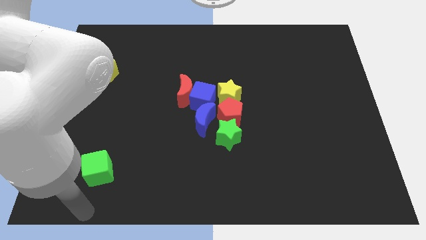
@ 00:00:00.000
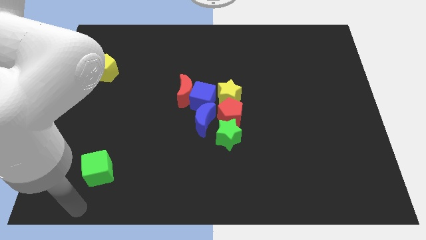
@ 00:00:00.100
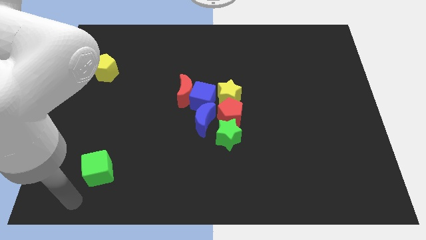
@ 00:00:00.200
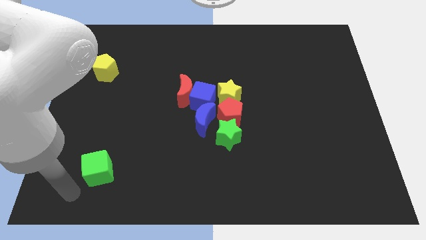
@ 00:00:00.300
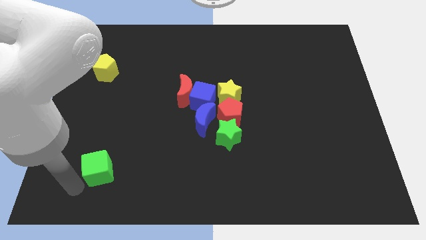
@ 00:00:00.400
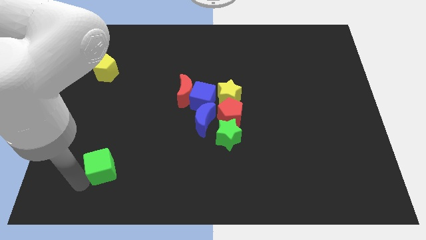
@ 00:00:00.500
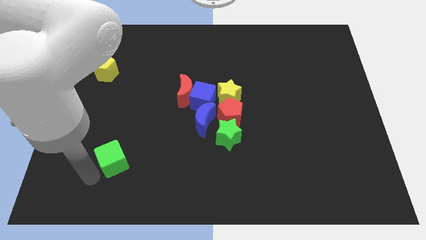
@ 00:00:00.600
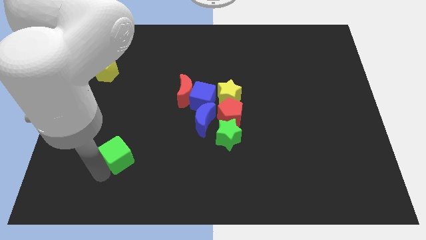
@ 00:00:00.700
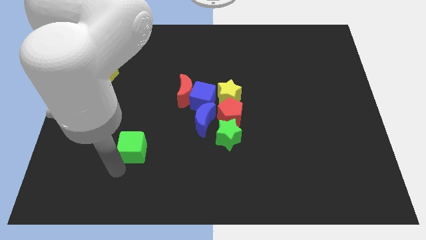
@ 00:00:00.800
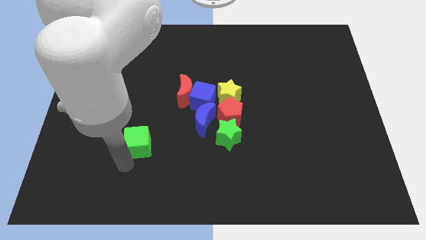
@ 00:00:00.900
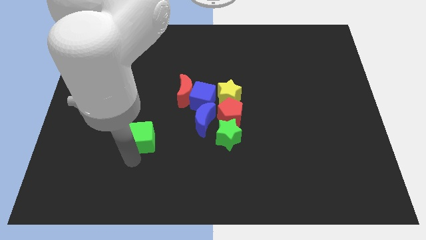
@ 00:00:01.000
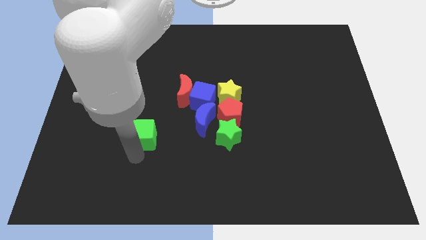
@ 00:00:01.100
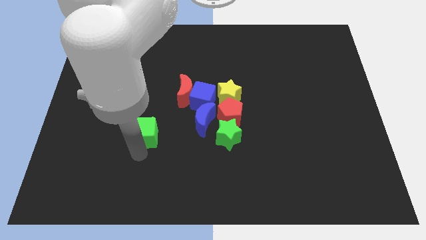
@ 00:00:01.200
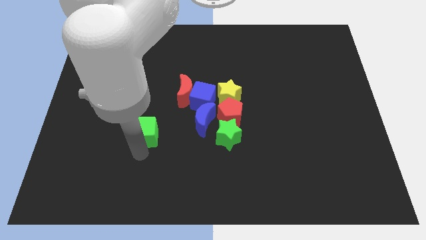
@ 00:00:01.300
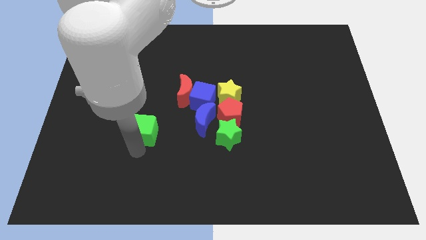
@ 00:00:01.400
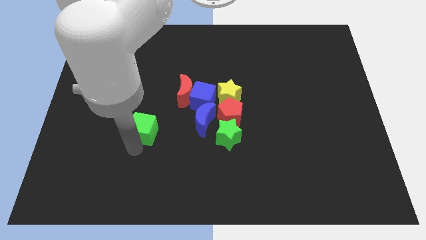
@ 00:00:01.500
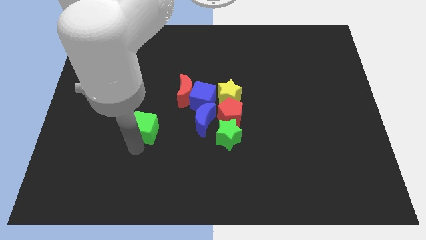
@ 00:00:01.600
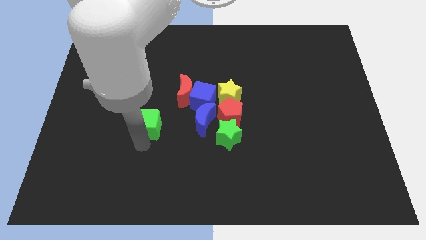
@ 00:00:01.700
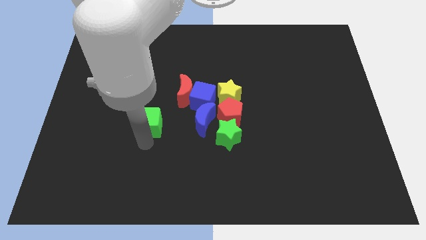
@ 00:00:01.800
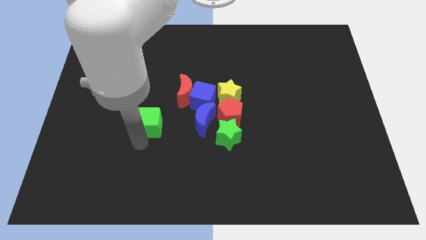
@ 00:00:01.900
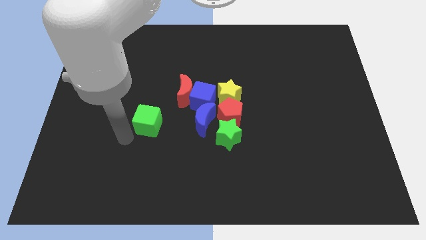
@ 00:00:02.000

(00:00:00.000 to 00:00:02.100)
move green cube to the left of blue moon

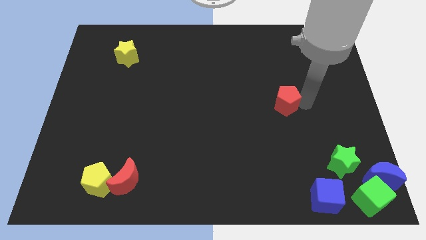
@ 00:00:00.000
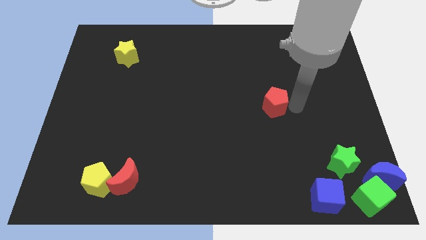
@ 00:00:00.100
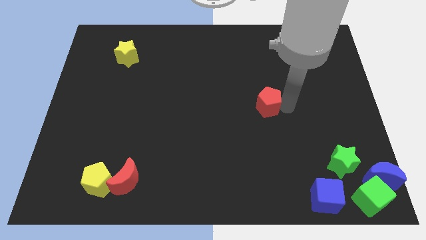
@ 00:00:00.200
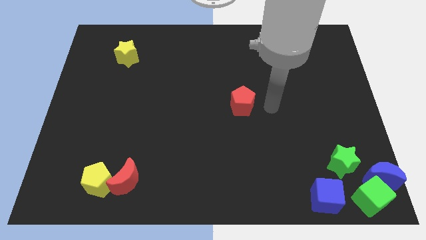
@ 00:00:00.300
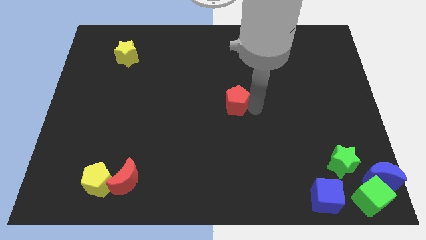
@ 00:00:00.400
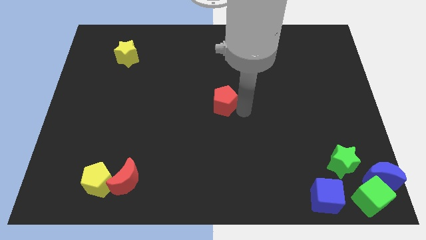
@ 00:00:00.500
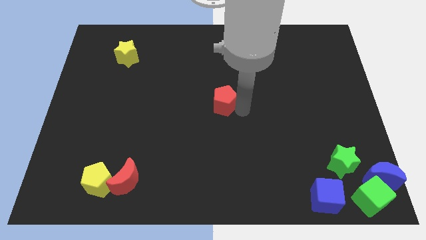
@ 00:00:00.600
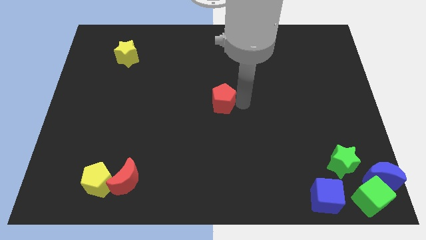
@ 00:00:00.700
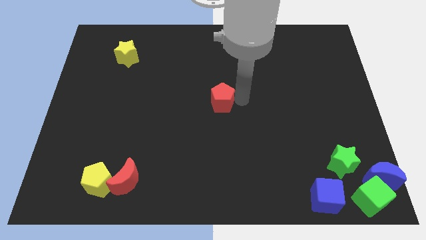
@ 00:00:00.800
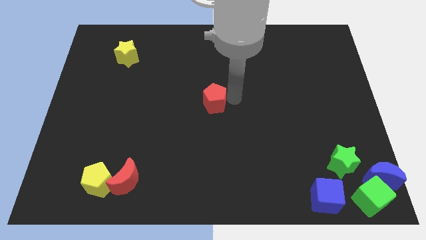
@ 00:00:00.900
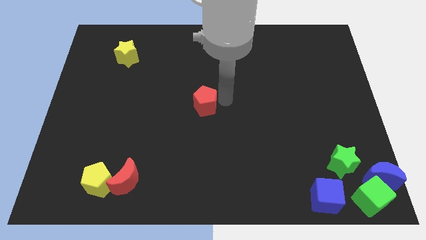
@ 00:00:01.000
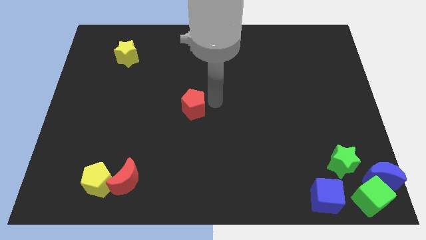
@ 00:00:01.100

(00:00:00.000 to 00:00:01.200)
push red pentagon to towards center

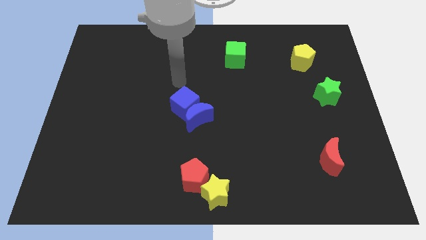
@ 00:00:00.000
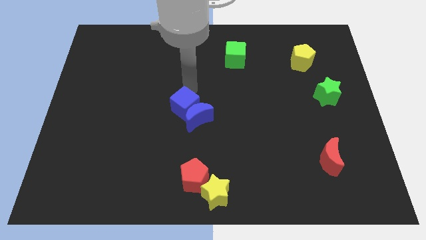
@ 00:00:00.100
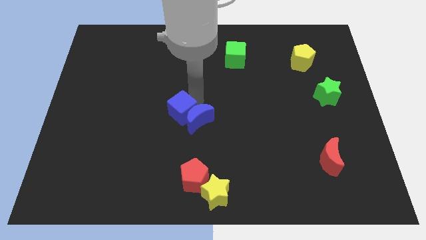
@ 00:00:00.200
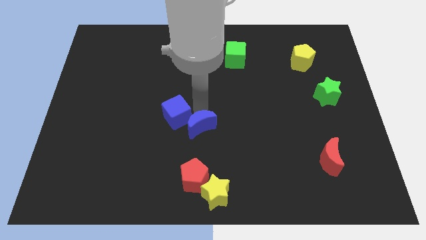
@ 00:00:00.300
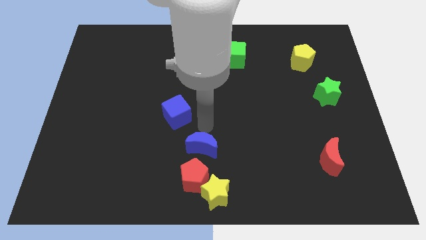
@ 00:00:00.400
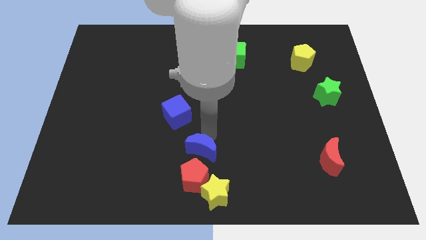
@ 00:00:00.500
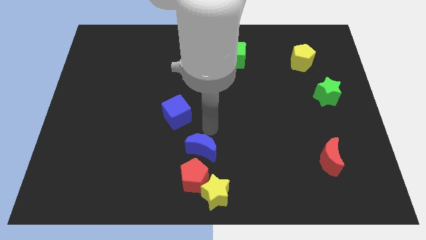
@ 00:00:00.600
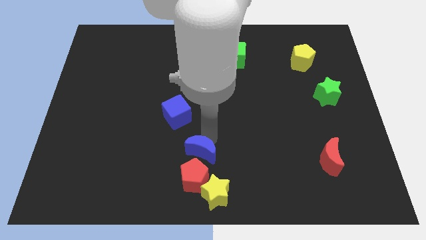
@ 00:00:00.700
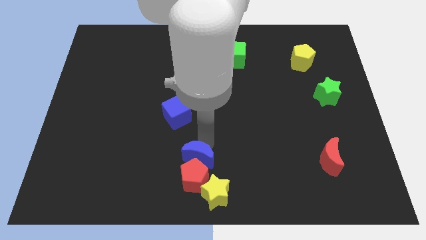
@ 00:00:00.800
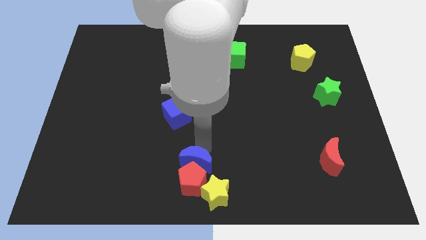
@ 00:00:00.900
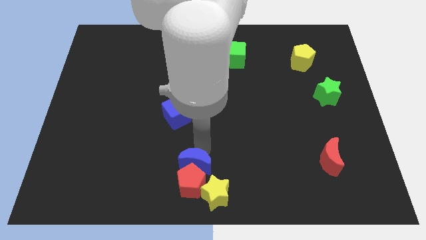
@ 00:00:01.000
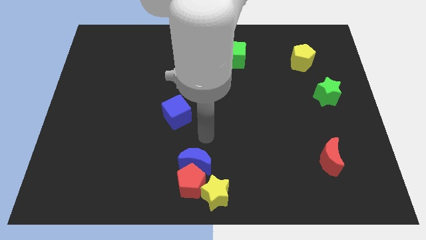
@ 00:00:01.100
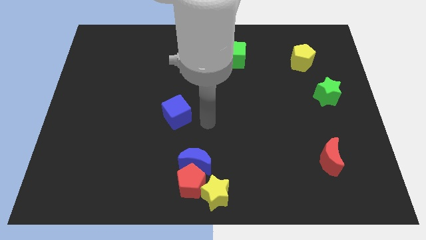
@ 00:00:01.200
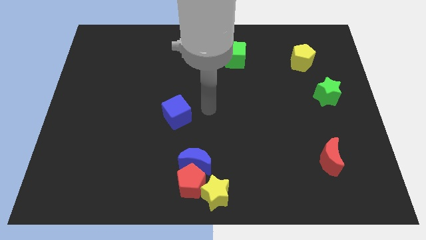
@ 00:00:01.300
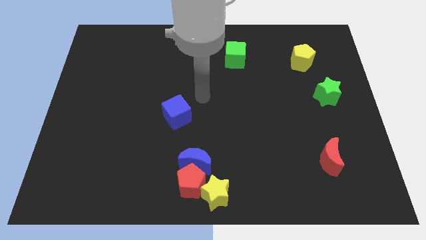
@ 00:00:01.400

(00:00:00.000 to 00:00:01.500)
move the blue crescent to the top of the red pentagon

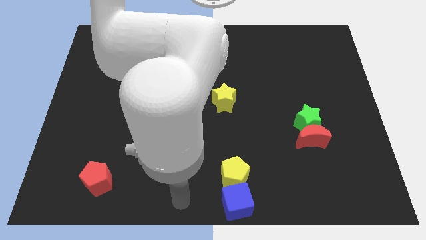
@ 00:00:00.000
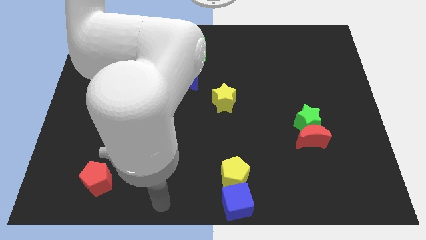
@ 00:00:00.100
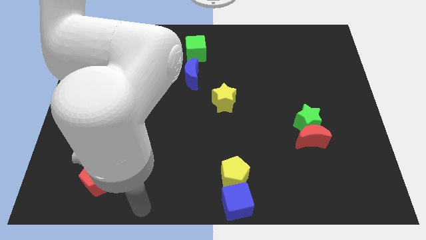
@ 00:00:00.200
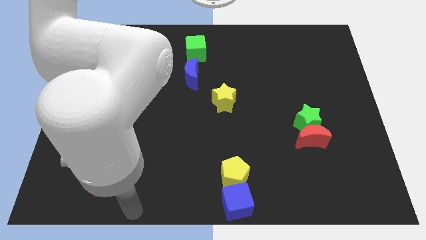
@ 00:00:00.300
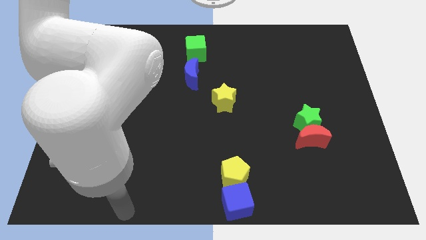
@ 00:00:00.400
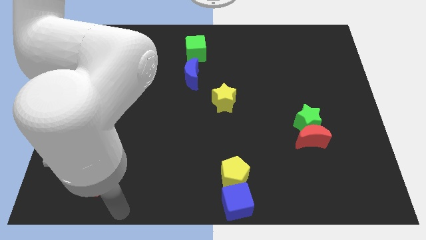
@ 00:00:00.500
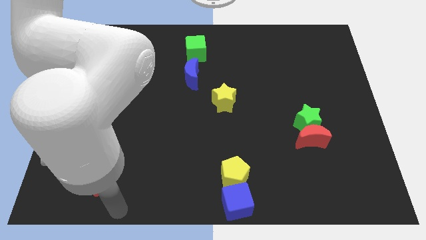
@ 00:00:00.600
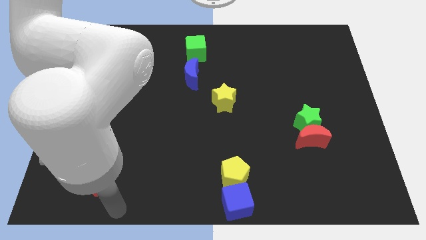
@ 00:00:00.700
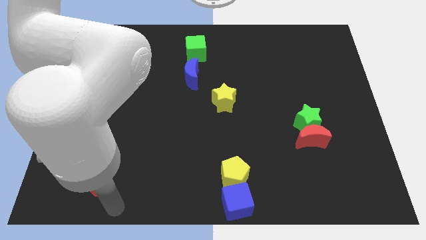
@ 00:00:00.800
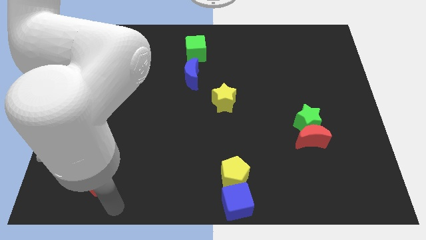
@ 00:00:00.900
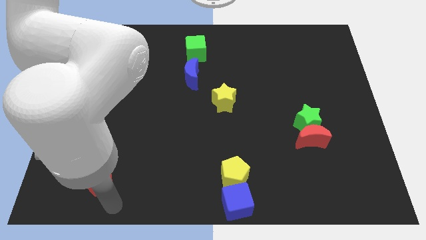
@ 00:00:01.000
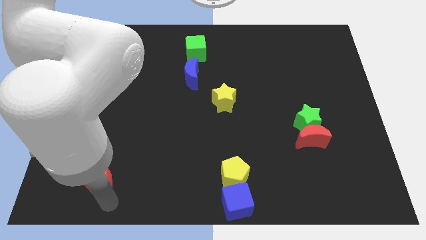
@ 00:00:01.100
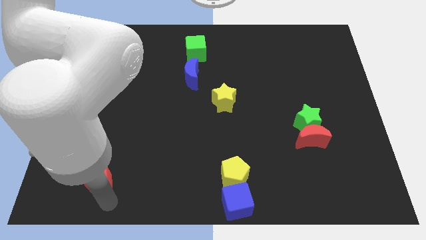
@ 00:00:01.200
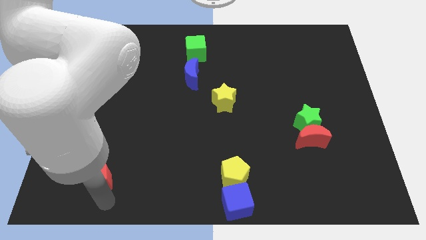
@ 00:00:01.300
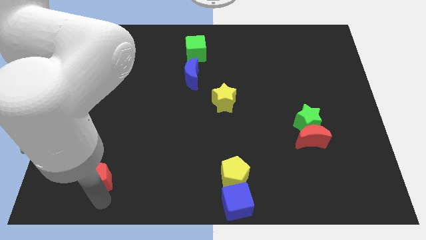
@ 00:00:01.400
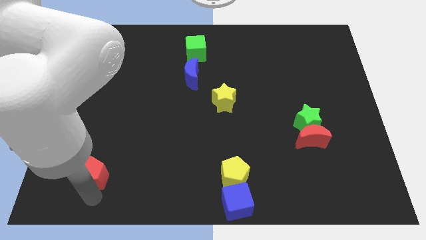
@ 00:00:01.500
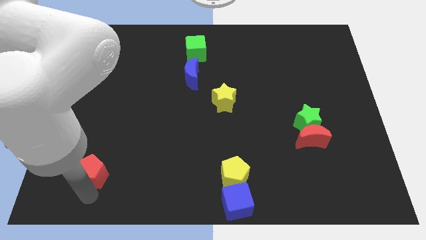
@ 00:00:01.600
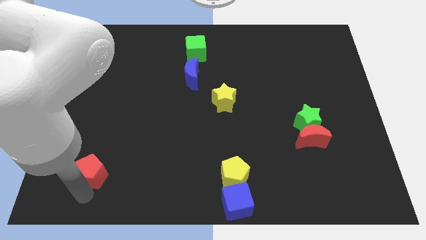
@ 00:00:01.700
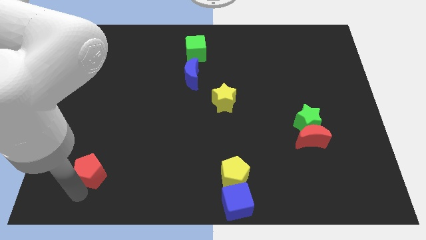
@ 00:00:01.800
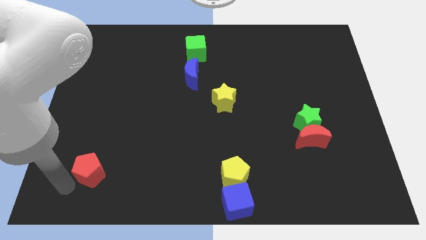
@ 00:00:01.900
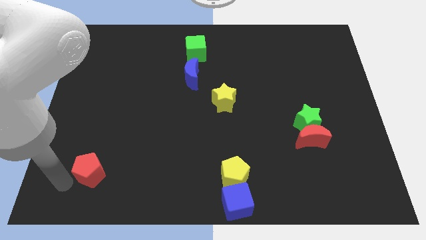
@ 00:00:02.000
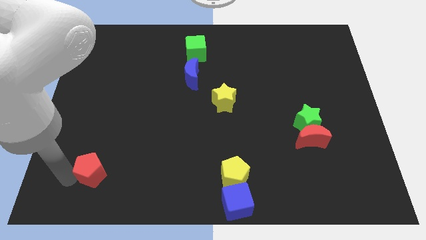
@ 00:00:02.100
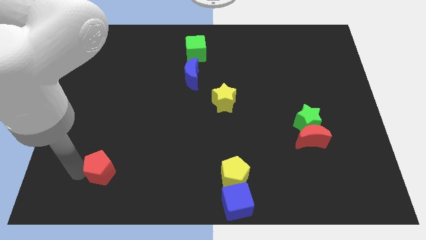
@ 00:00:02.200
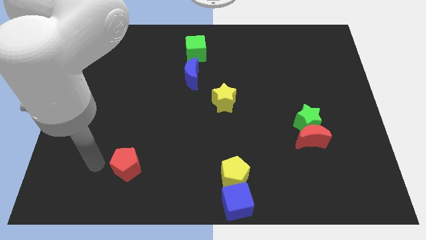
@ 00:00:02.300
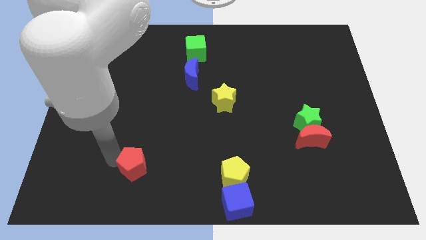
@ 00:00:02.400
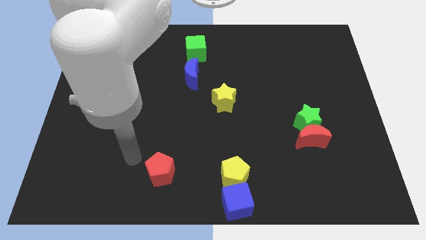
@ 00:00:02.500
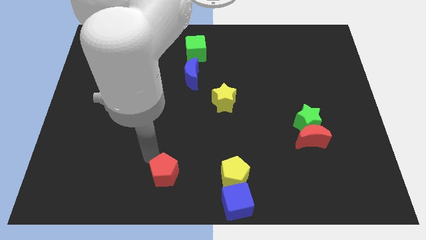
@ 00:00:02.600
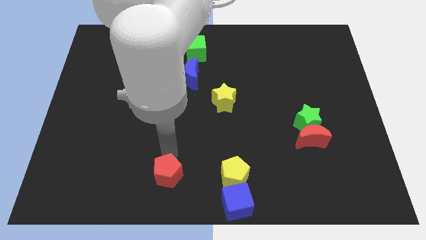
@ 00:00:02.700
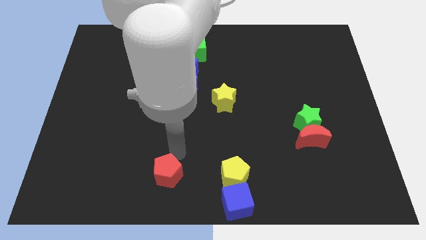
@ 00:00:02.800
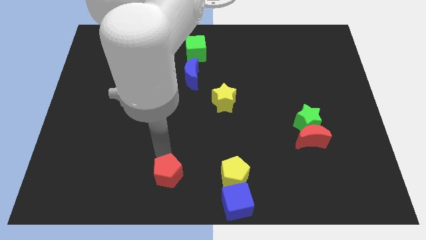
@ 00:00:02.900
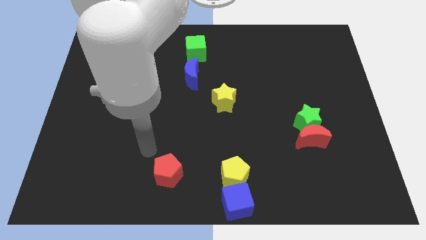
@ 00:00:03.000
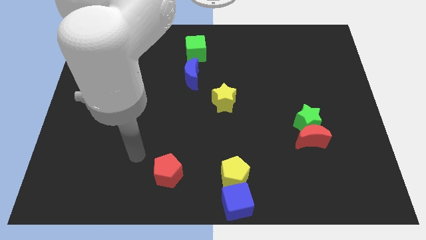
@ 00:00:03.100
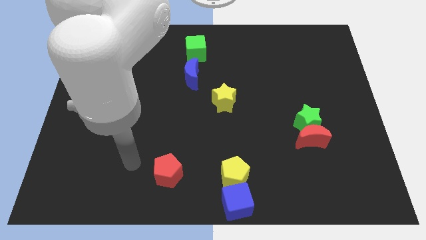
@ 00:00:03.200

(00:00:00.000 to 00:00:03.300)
move the red pentagon to the left of yellow pentagon

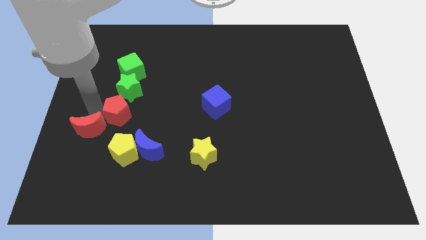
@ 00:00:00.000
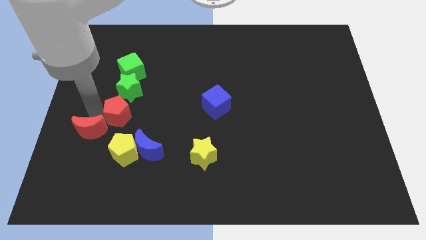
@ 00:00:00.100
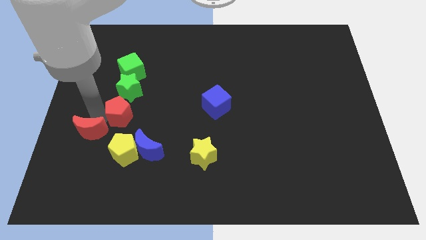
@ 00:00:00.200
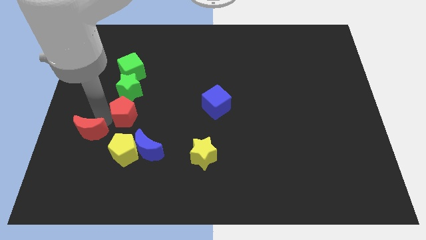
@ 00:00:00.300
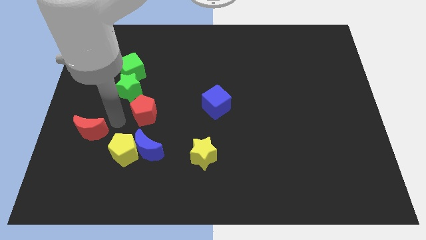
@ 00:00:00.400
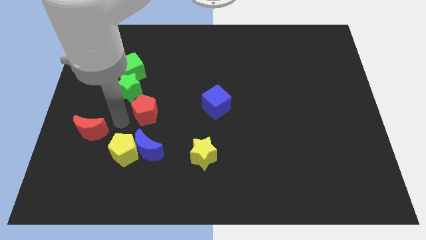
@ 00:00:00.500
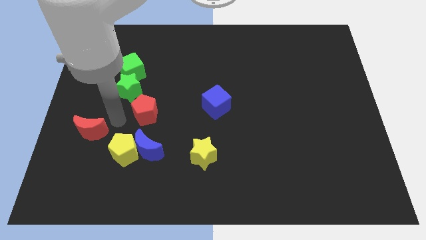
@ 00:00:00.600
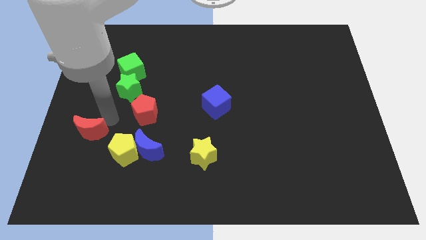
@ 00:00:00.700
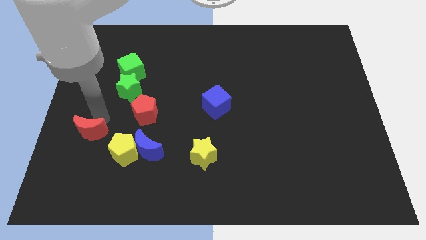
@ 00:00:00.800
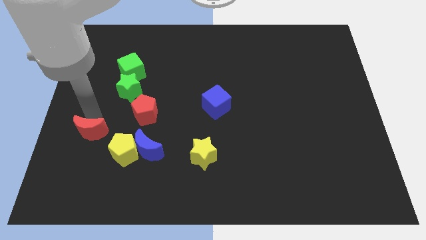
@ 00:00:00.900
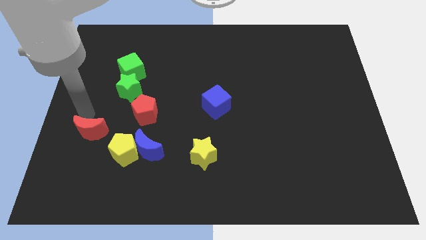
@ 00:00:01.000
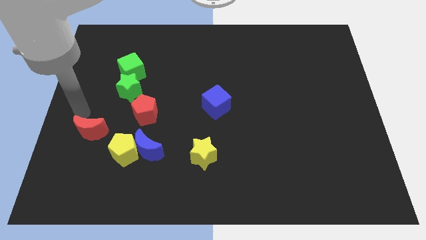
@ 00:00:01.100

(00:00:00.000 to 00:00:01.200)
drag the red pentagon to the right
